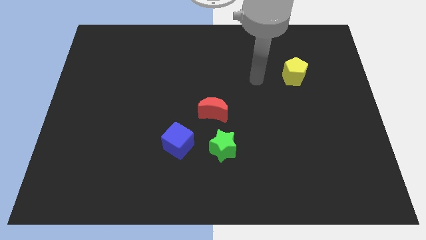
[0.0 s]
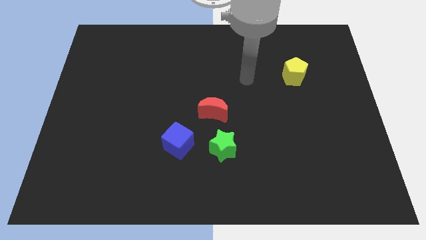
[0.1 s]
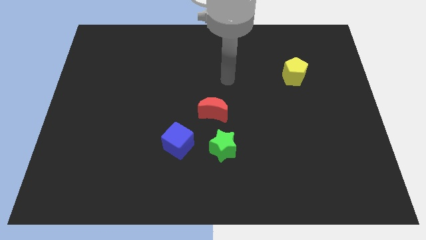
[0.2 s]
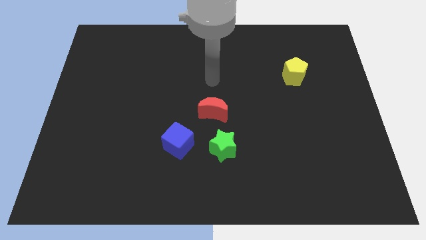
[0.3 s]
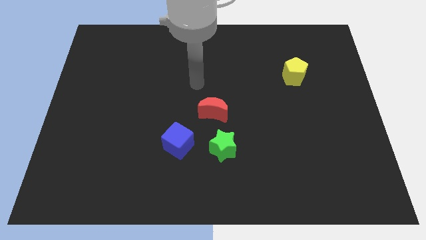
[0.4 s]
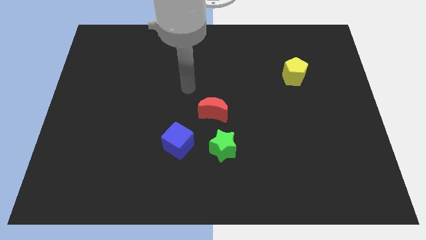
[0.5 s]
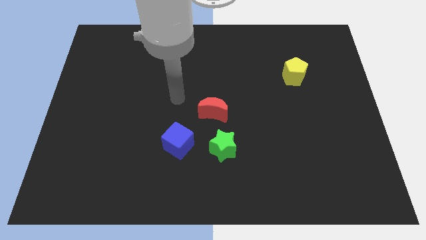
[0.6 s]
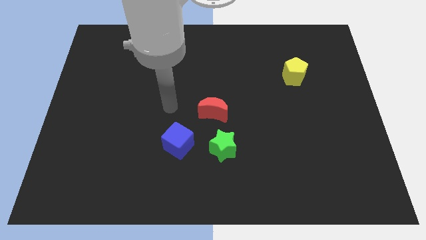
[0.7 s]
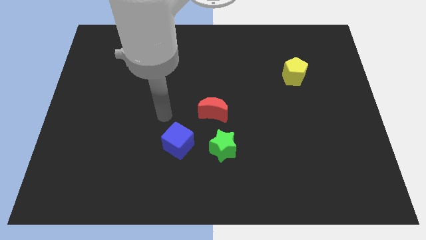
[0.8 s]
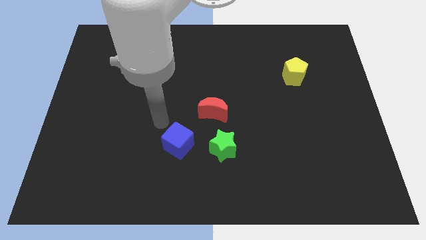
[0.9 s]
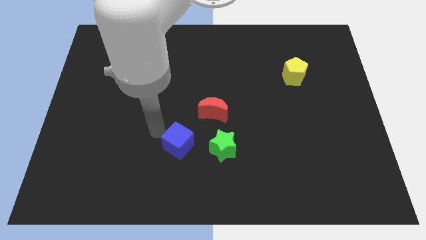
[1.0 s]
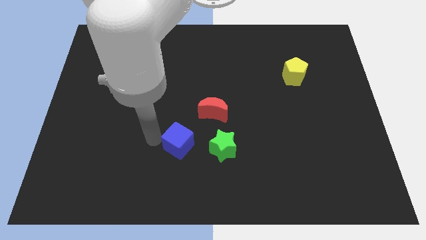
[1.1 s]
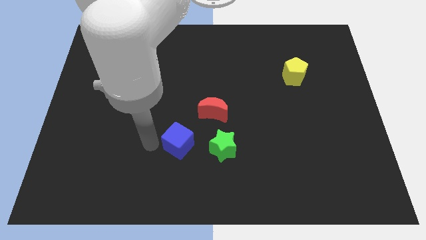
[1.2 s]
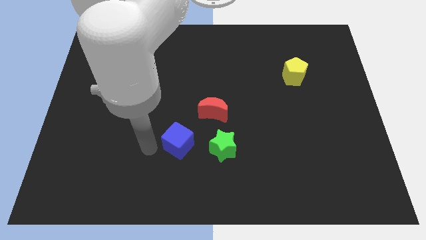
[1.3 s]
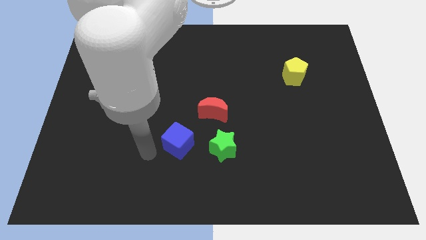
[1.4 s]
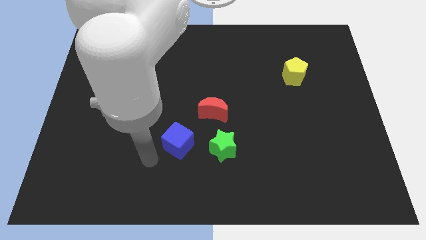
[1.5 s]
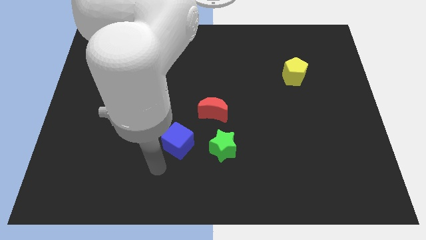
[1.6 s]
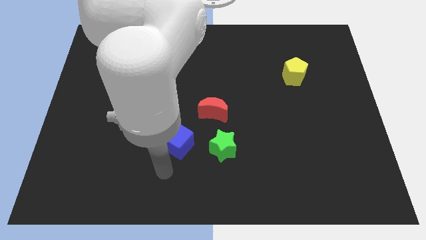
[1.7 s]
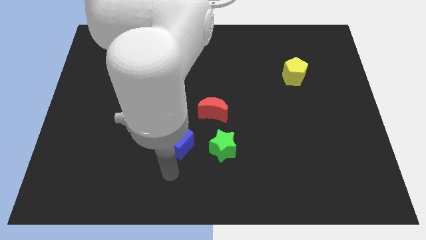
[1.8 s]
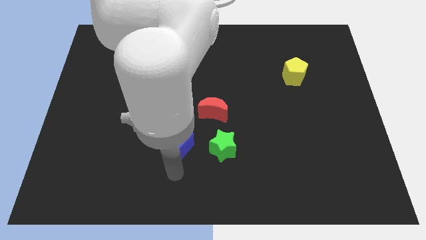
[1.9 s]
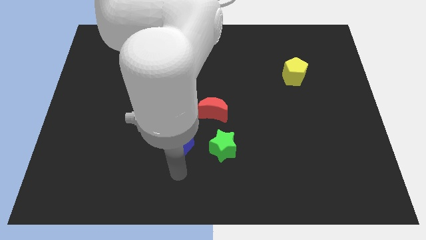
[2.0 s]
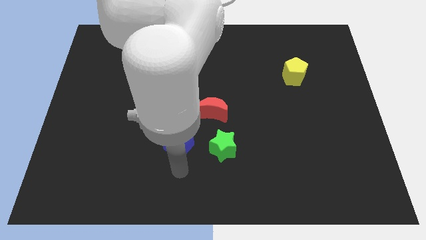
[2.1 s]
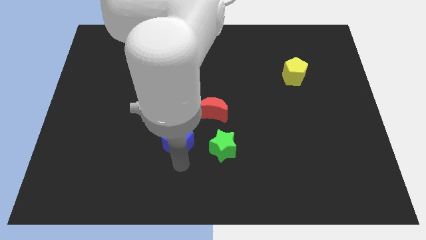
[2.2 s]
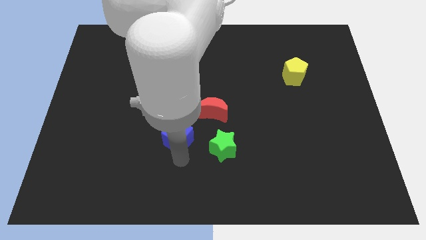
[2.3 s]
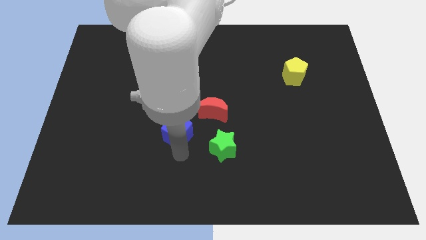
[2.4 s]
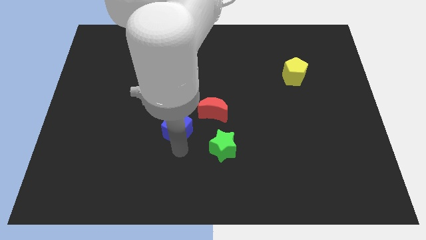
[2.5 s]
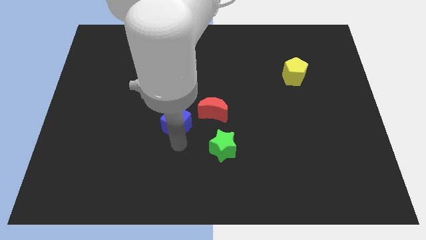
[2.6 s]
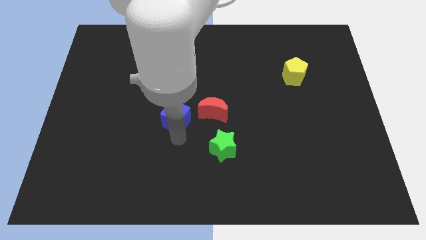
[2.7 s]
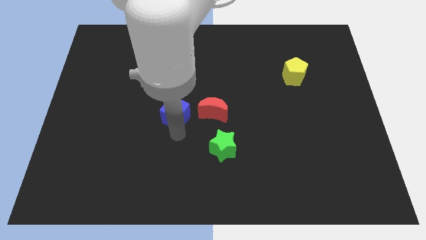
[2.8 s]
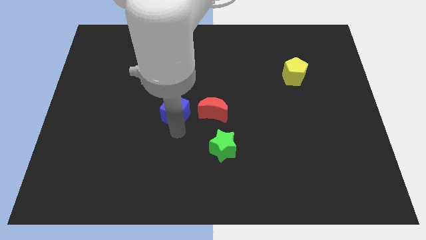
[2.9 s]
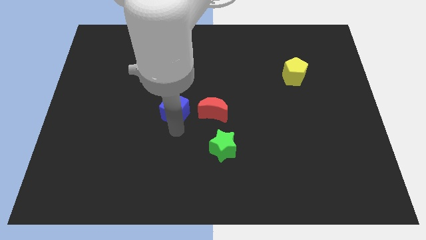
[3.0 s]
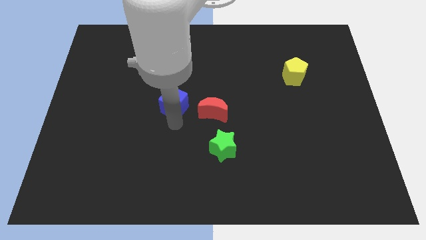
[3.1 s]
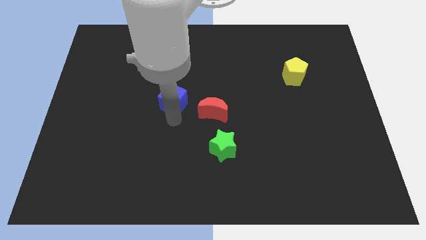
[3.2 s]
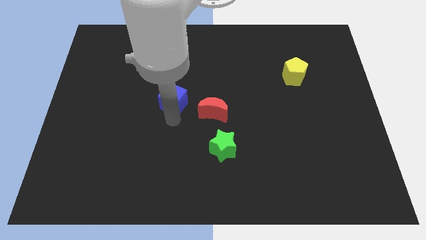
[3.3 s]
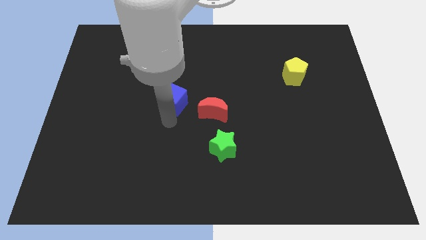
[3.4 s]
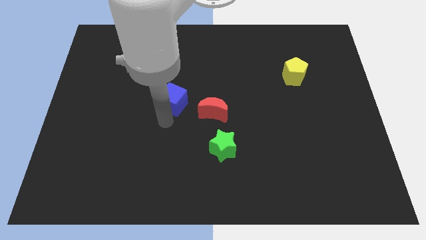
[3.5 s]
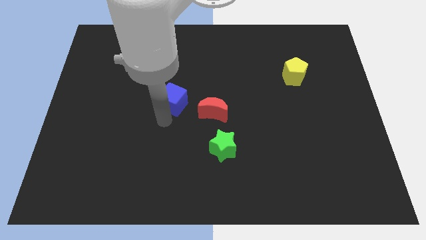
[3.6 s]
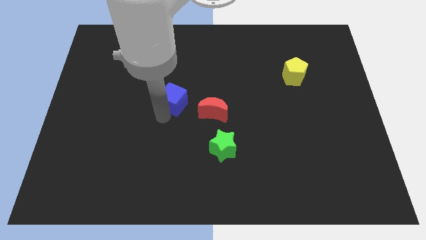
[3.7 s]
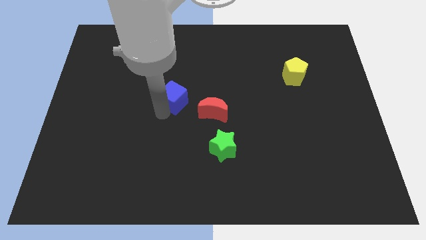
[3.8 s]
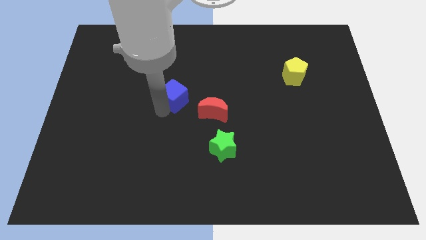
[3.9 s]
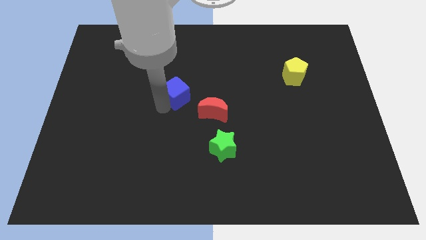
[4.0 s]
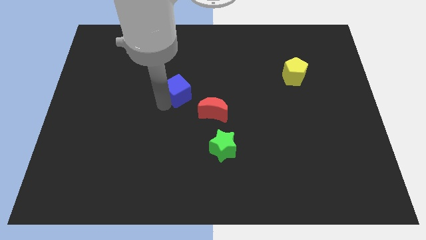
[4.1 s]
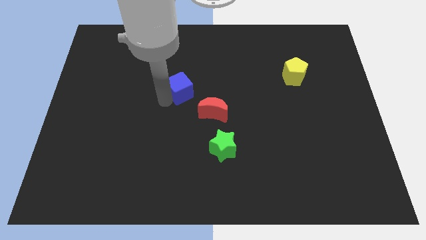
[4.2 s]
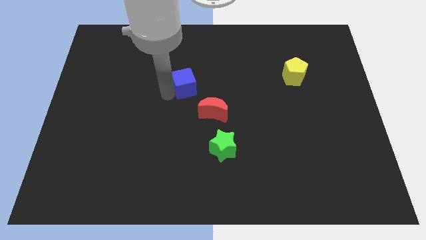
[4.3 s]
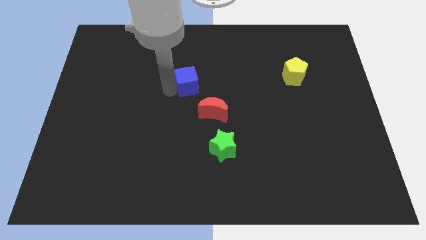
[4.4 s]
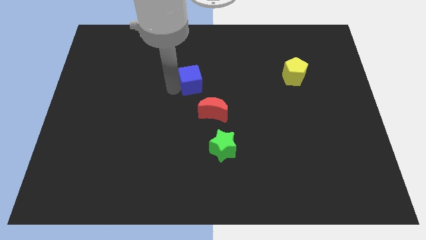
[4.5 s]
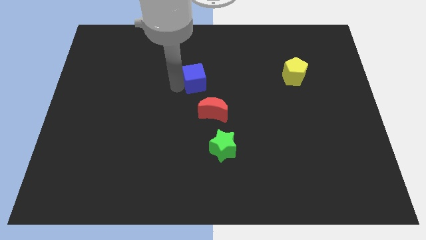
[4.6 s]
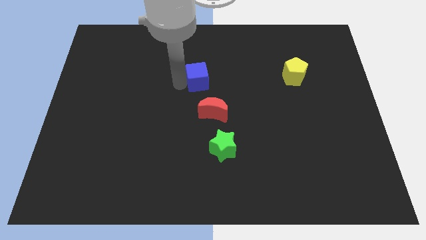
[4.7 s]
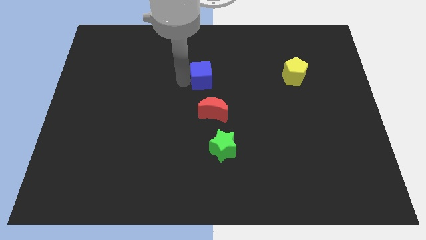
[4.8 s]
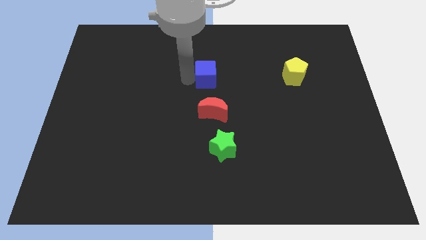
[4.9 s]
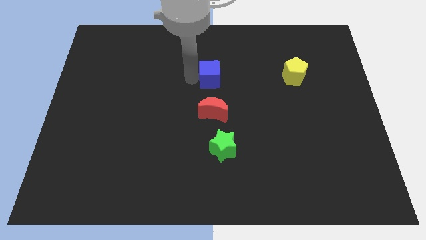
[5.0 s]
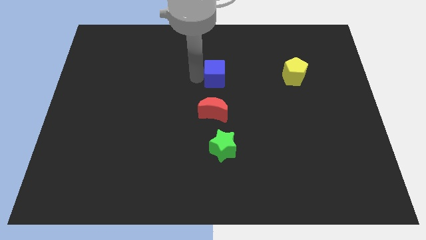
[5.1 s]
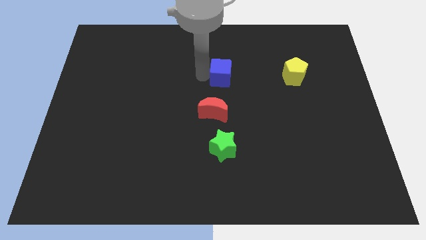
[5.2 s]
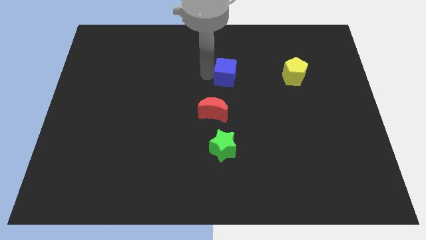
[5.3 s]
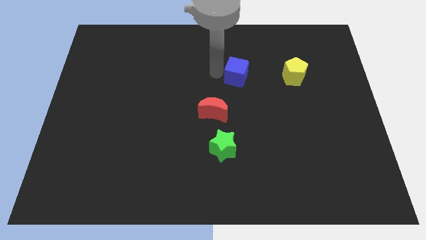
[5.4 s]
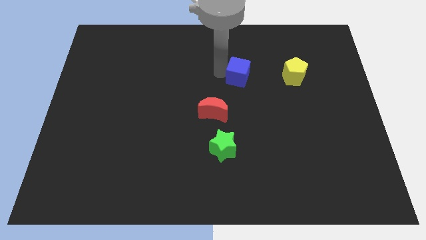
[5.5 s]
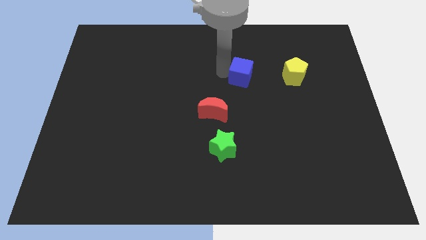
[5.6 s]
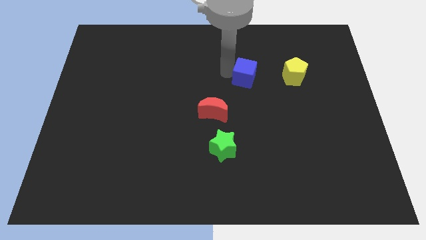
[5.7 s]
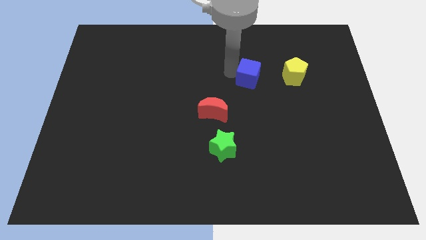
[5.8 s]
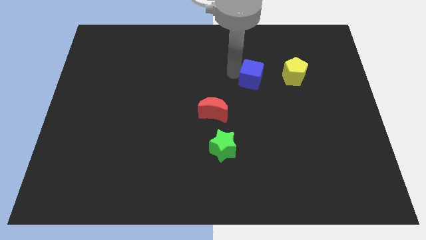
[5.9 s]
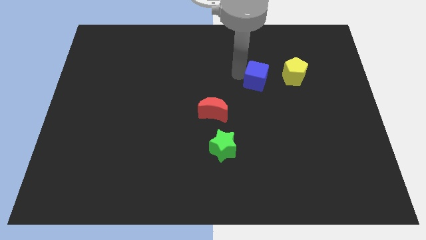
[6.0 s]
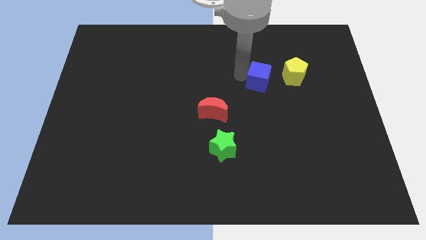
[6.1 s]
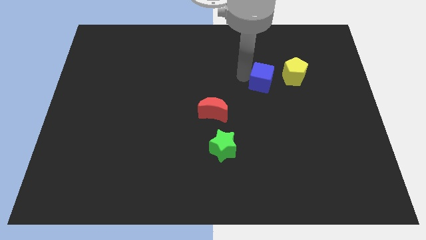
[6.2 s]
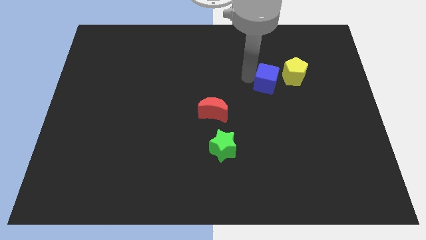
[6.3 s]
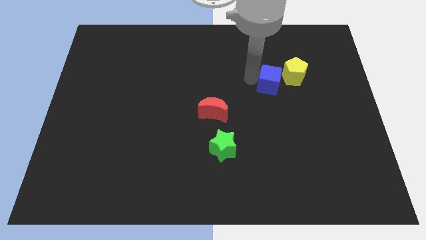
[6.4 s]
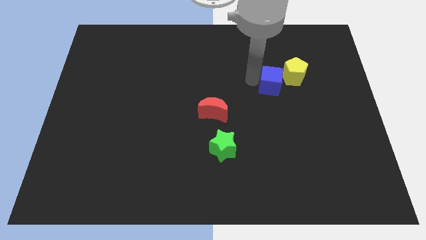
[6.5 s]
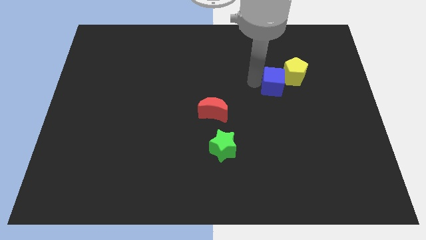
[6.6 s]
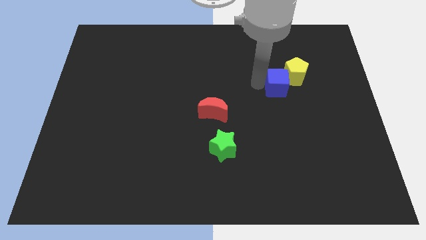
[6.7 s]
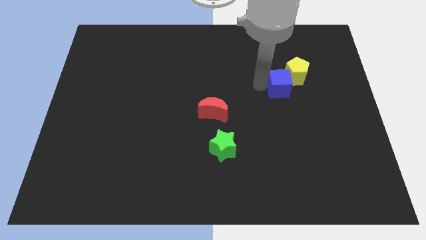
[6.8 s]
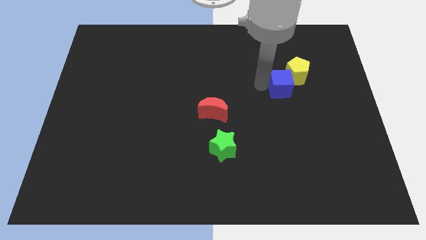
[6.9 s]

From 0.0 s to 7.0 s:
move the blue cube close to the yellow block

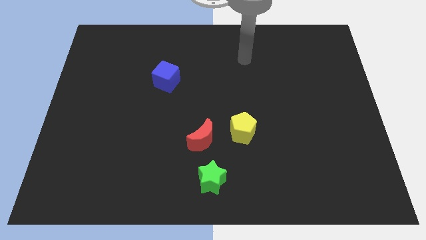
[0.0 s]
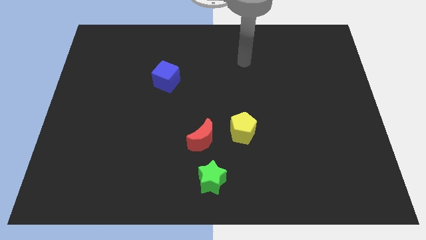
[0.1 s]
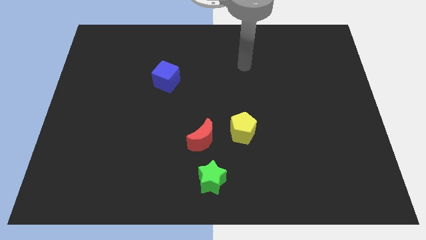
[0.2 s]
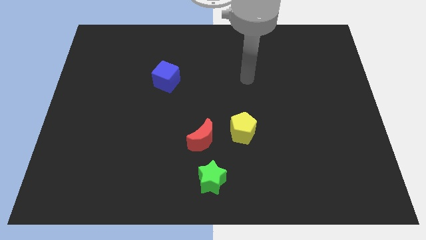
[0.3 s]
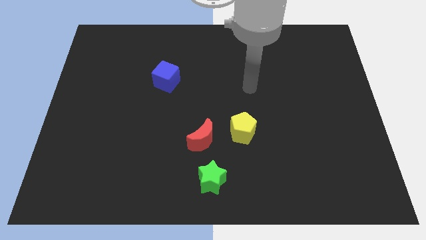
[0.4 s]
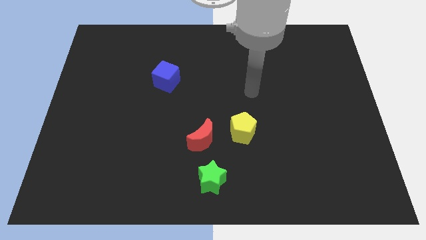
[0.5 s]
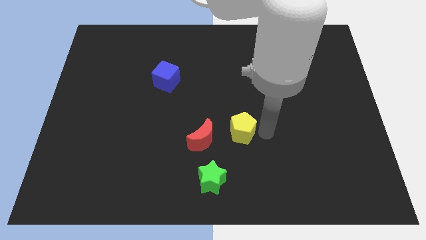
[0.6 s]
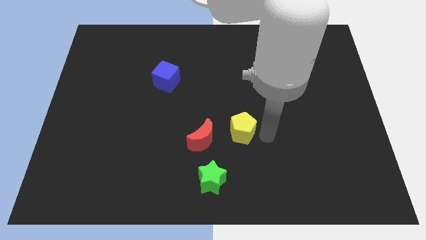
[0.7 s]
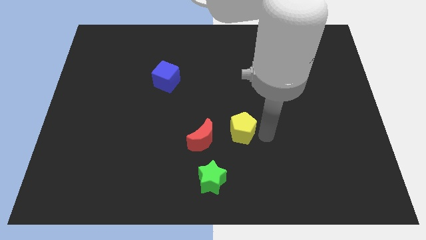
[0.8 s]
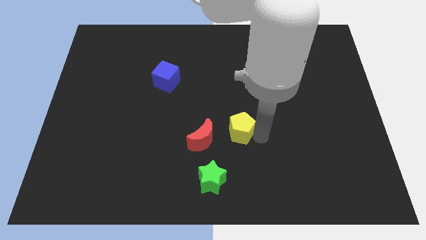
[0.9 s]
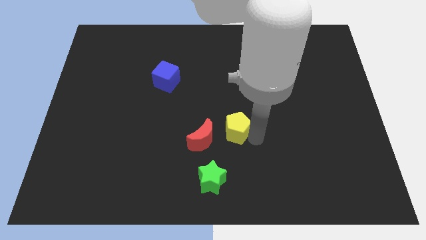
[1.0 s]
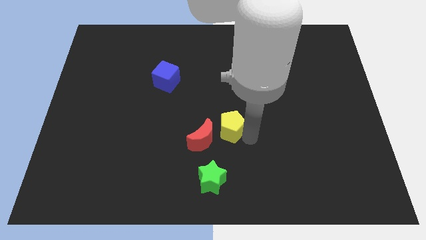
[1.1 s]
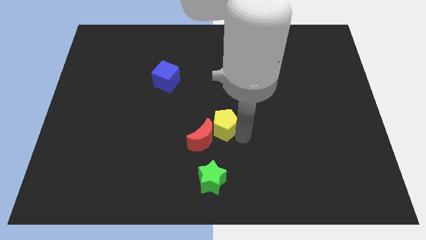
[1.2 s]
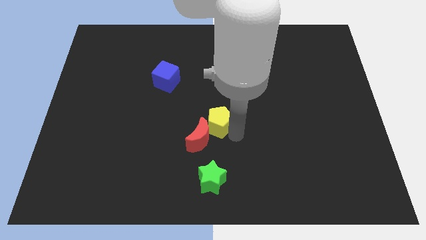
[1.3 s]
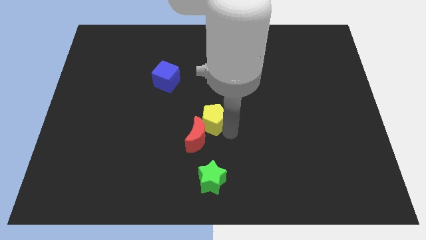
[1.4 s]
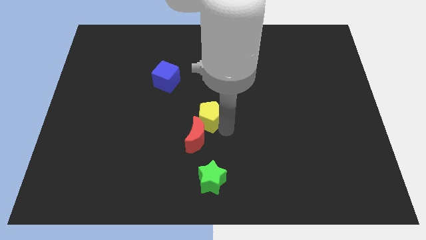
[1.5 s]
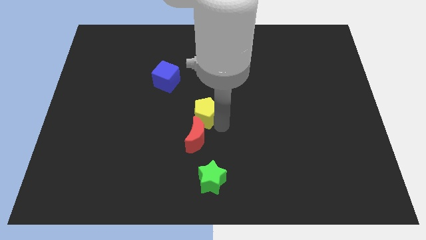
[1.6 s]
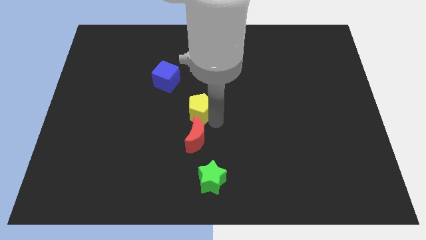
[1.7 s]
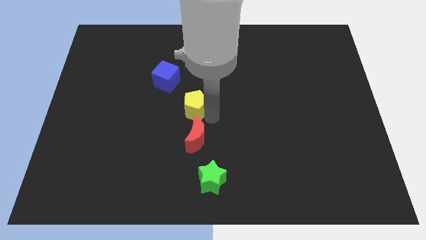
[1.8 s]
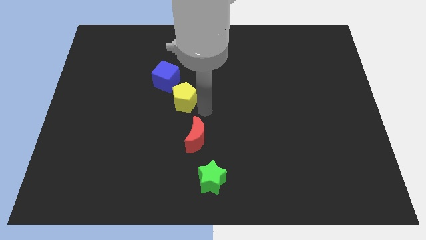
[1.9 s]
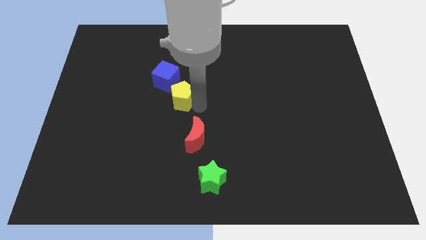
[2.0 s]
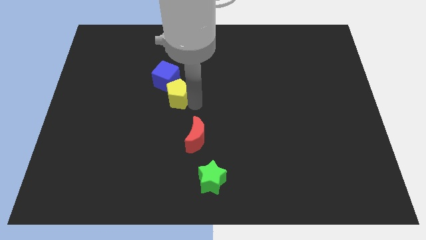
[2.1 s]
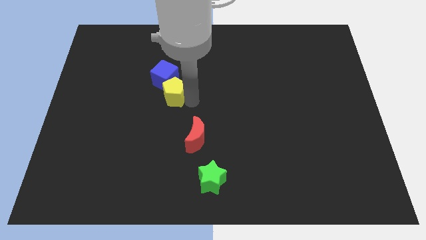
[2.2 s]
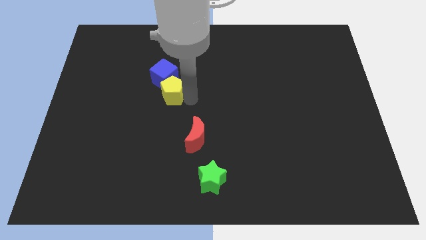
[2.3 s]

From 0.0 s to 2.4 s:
slide the yellow block next to the blue block
